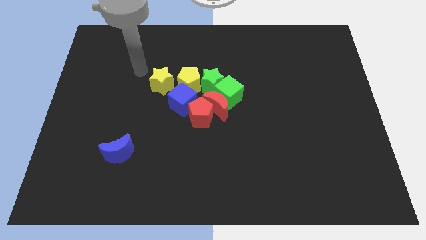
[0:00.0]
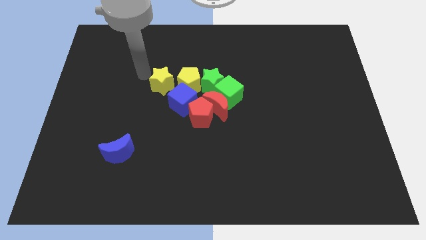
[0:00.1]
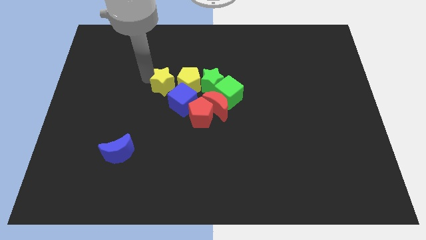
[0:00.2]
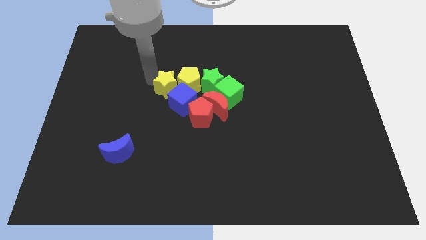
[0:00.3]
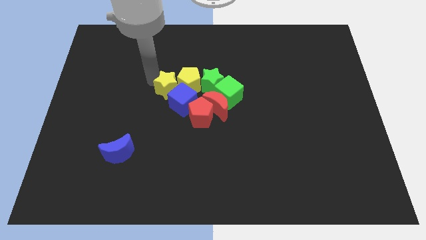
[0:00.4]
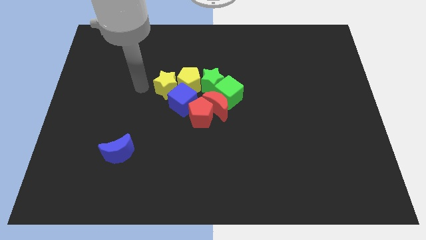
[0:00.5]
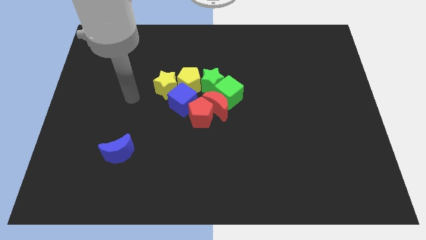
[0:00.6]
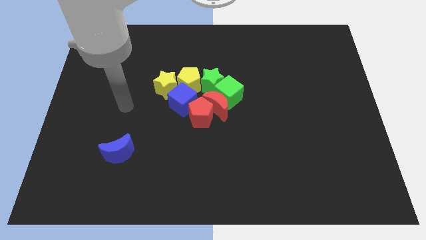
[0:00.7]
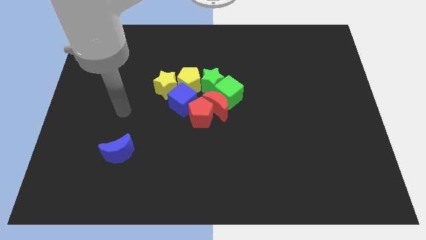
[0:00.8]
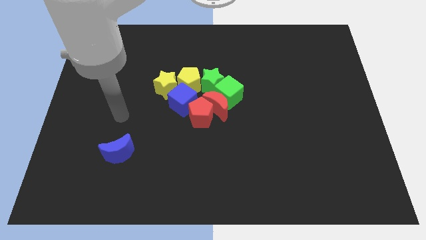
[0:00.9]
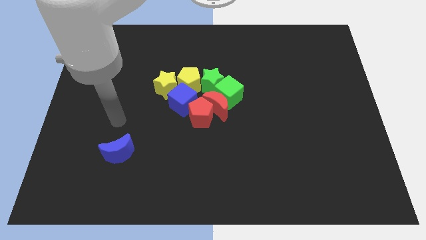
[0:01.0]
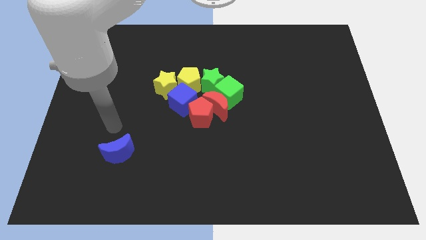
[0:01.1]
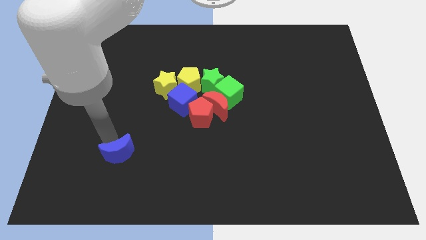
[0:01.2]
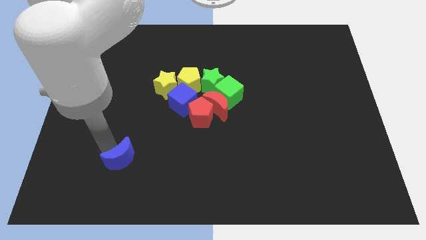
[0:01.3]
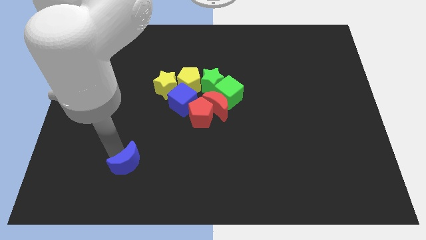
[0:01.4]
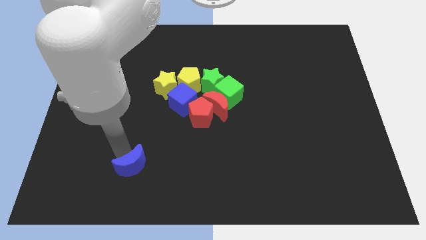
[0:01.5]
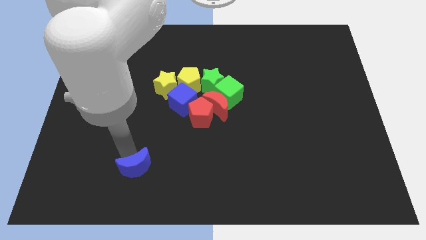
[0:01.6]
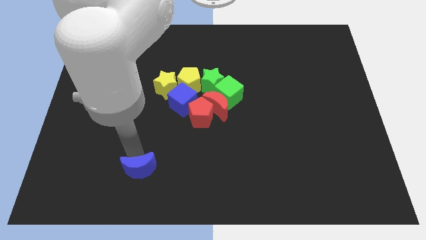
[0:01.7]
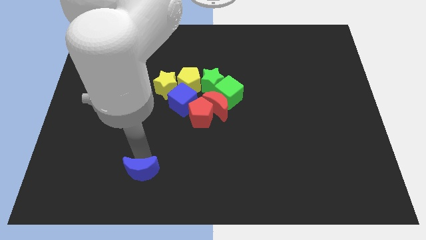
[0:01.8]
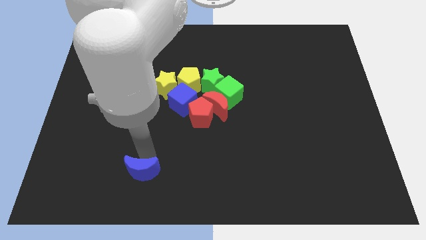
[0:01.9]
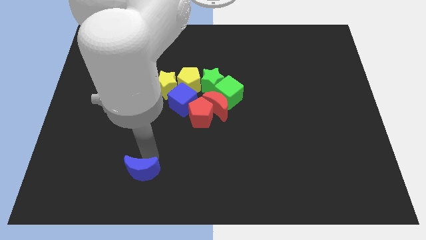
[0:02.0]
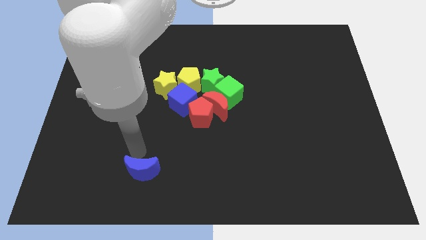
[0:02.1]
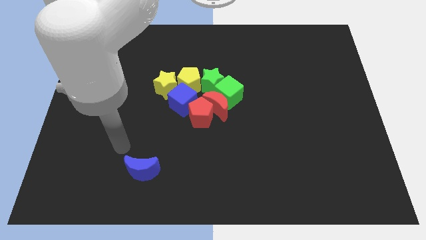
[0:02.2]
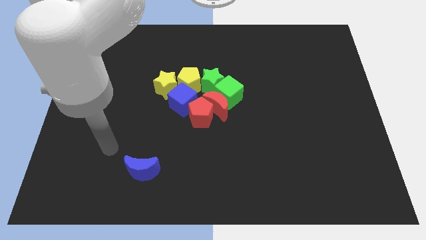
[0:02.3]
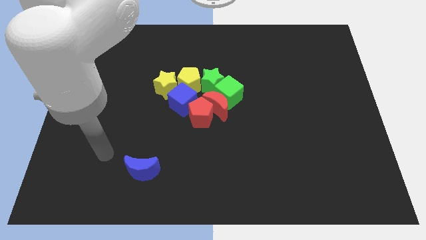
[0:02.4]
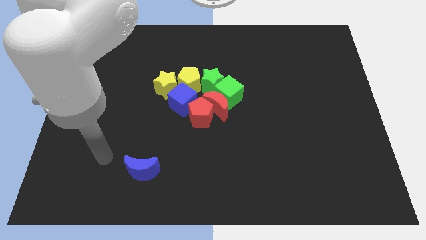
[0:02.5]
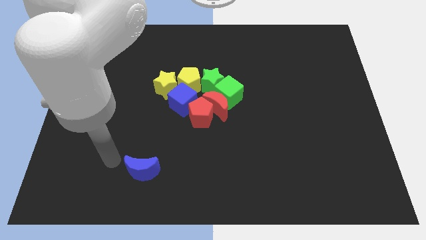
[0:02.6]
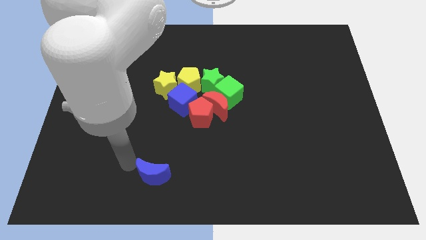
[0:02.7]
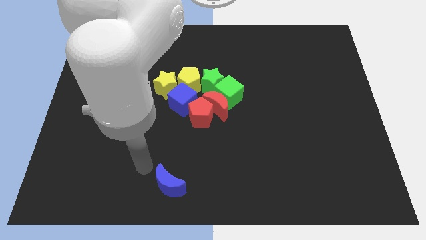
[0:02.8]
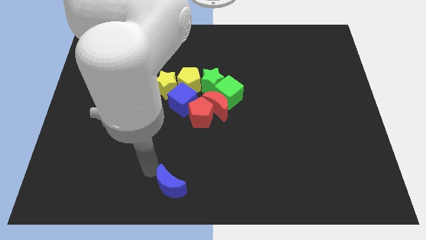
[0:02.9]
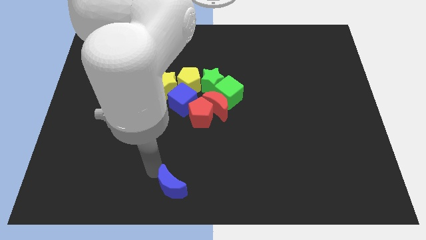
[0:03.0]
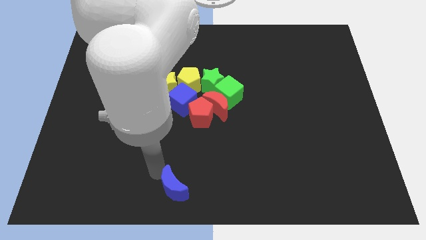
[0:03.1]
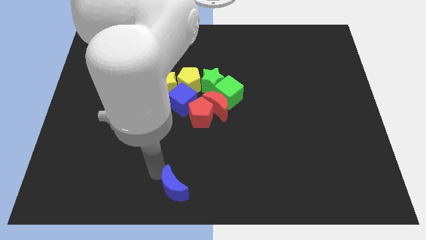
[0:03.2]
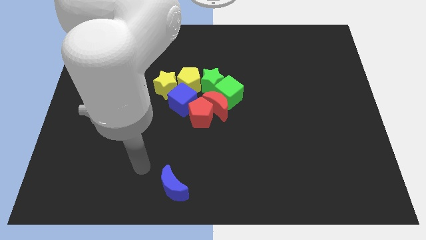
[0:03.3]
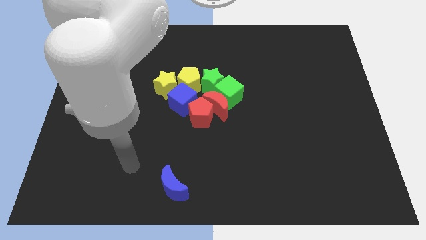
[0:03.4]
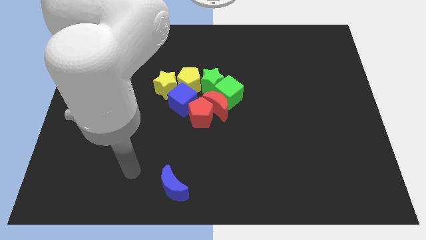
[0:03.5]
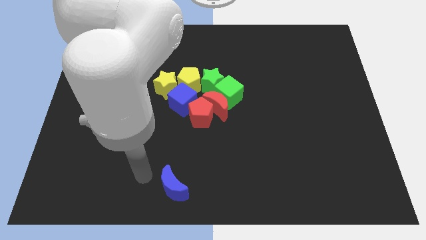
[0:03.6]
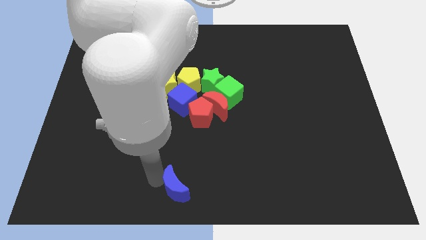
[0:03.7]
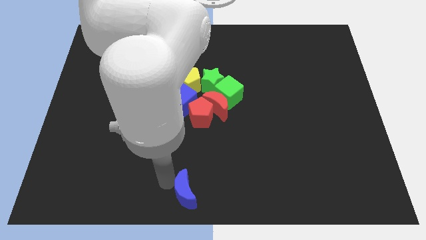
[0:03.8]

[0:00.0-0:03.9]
slightly push the blue moon

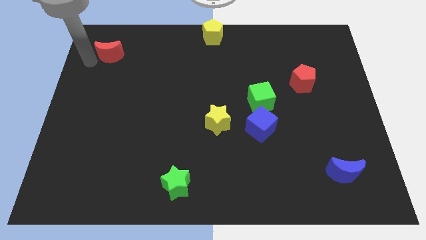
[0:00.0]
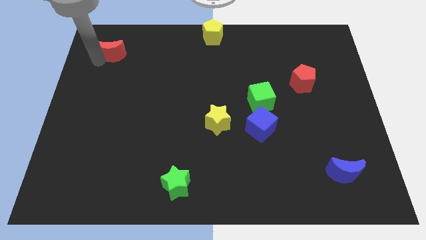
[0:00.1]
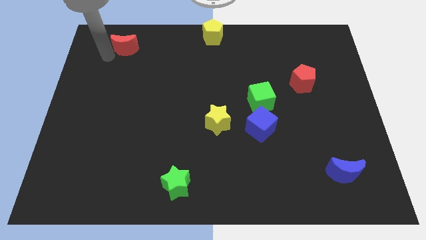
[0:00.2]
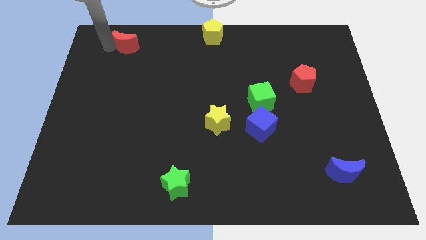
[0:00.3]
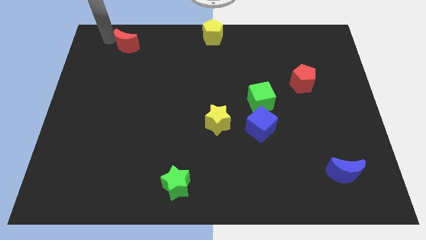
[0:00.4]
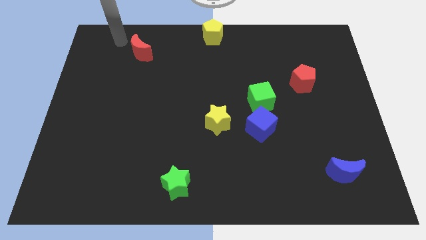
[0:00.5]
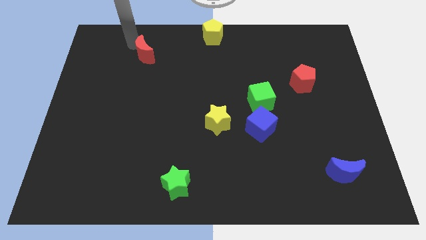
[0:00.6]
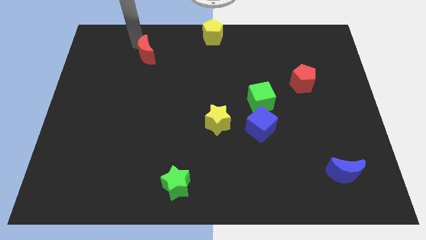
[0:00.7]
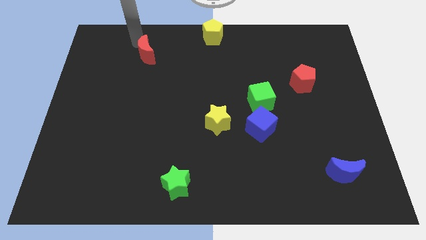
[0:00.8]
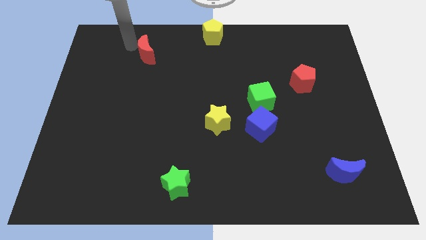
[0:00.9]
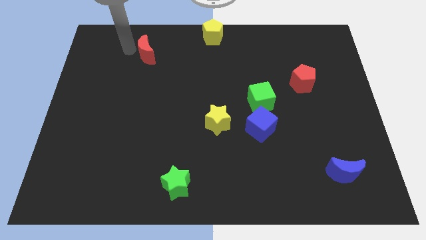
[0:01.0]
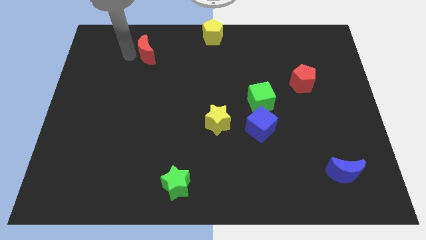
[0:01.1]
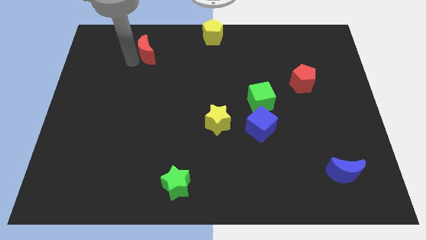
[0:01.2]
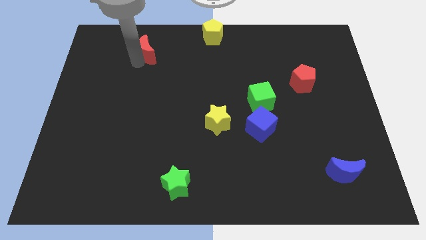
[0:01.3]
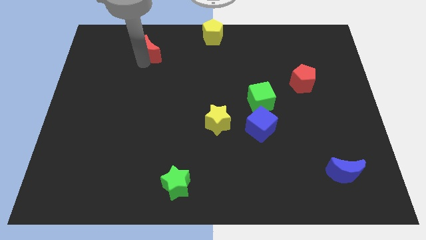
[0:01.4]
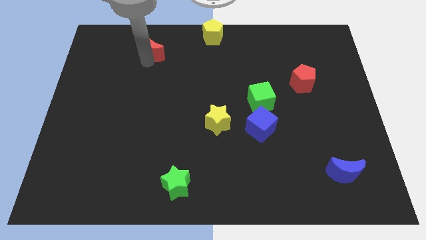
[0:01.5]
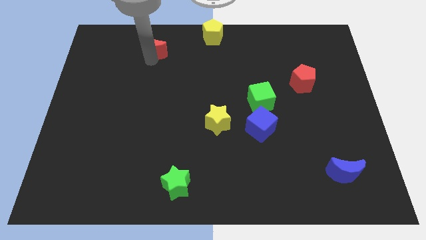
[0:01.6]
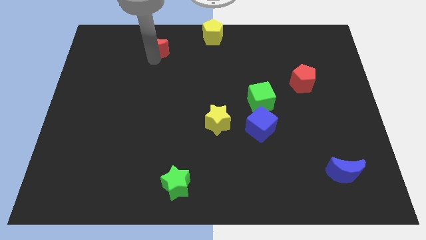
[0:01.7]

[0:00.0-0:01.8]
drag the red moon towards the yellow pentagon

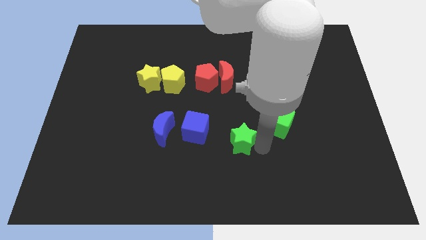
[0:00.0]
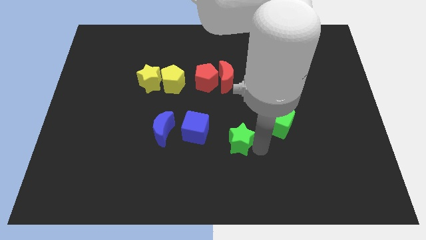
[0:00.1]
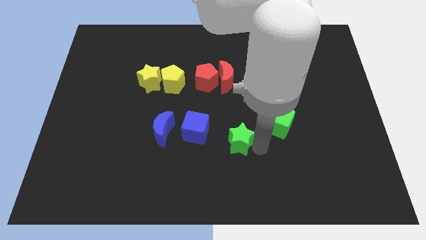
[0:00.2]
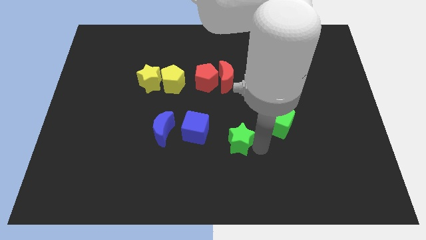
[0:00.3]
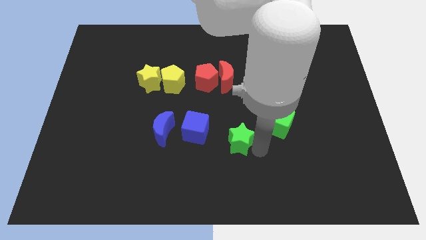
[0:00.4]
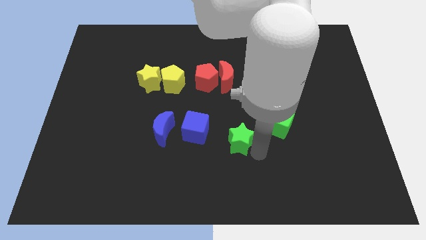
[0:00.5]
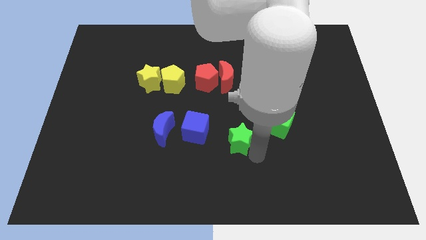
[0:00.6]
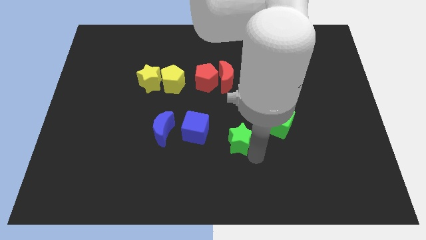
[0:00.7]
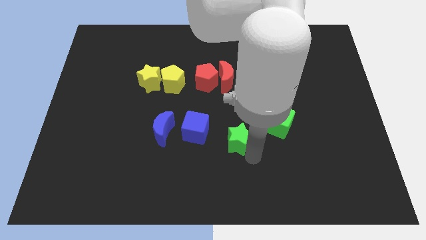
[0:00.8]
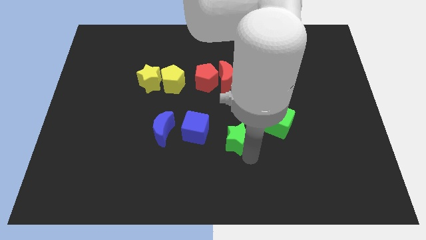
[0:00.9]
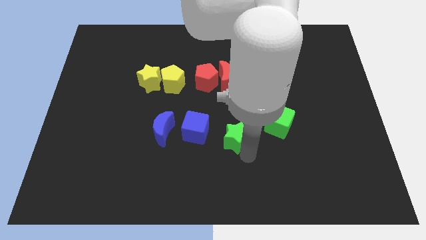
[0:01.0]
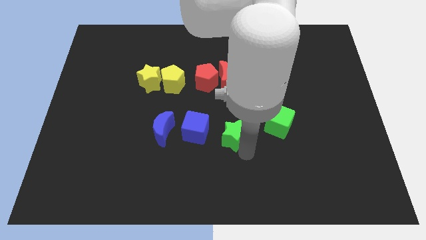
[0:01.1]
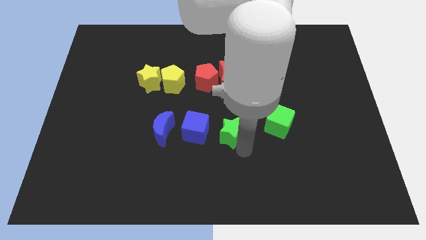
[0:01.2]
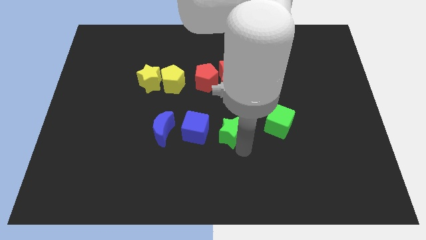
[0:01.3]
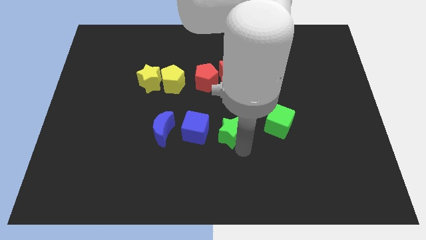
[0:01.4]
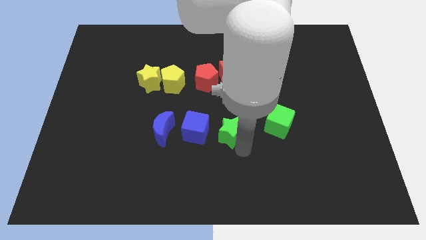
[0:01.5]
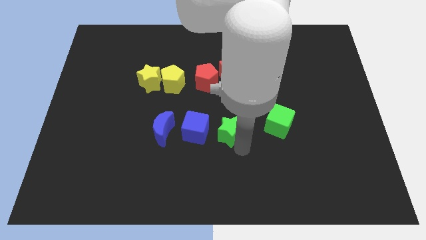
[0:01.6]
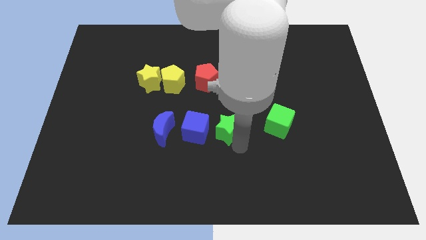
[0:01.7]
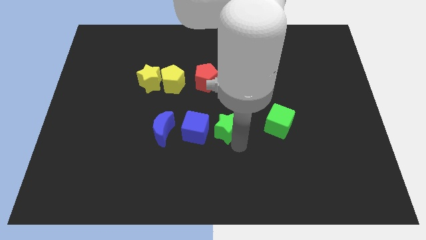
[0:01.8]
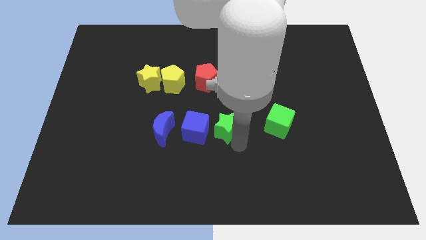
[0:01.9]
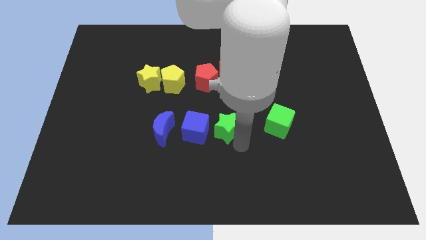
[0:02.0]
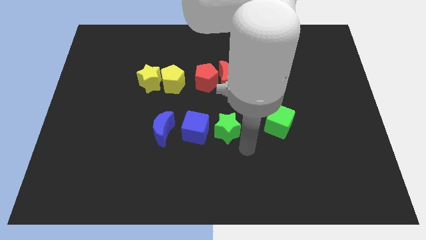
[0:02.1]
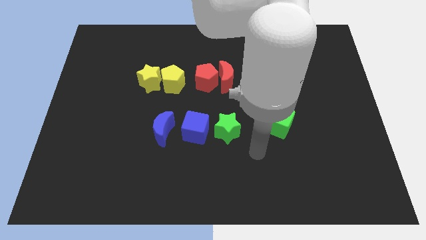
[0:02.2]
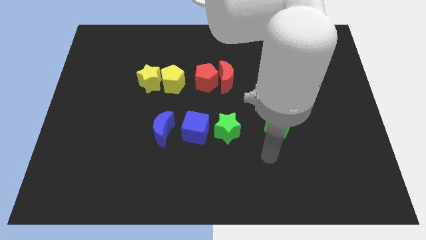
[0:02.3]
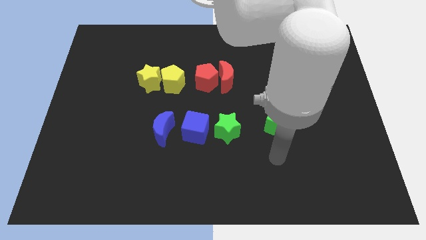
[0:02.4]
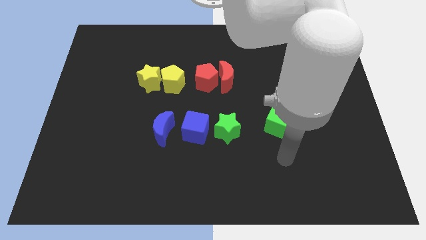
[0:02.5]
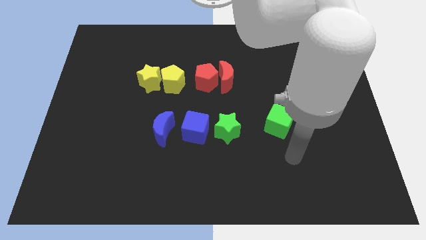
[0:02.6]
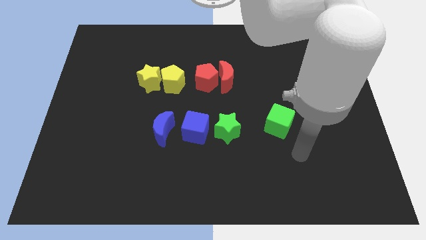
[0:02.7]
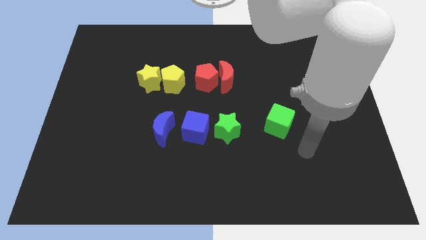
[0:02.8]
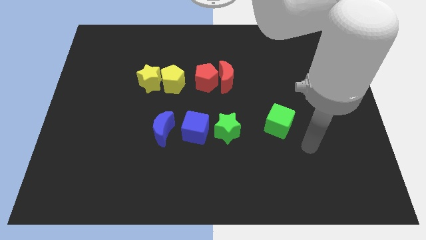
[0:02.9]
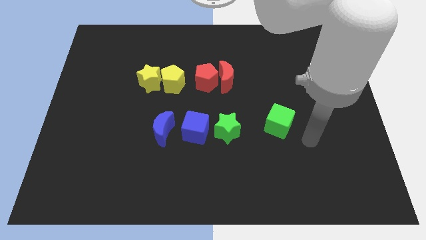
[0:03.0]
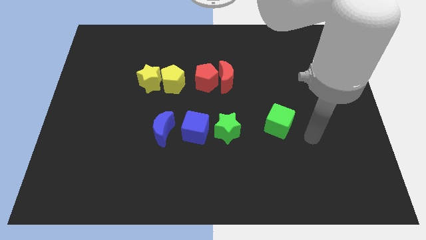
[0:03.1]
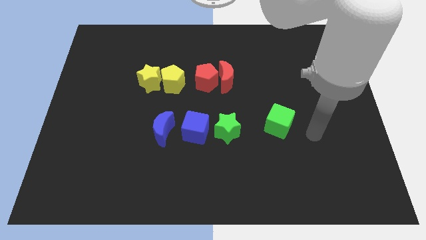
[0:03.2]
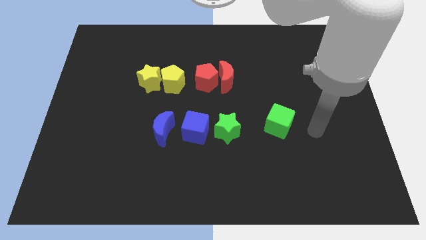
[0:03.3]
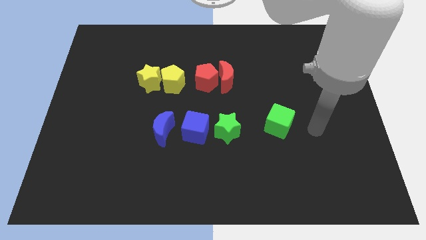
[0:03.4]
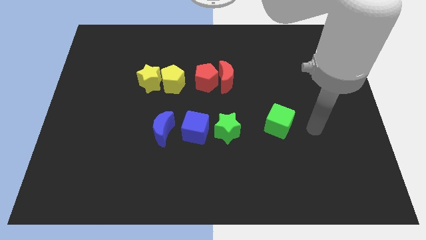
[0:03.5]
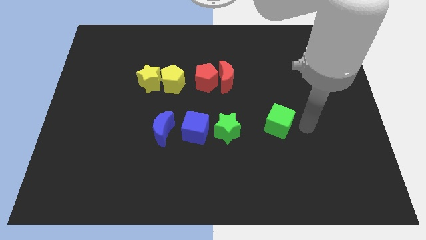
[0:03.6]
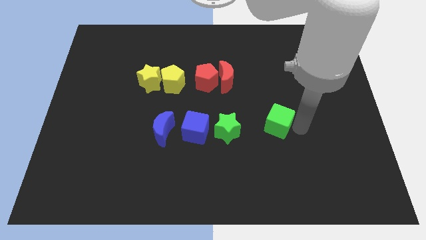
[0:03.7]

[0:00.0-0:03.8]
place the green star right to the blue cube to form a horizontal line
